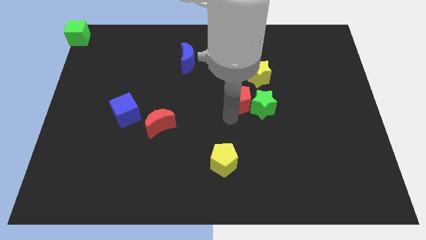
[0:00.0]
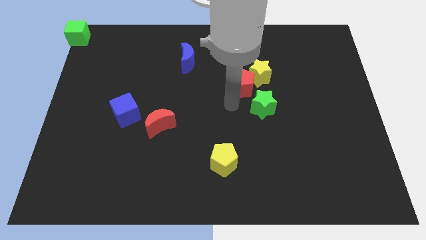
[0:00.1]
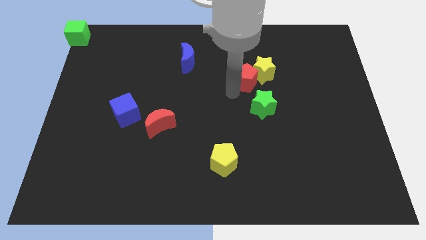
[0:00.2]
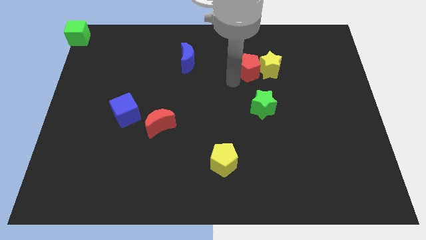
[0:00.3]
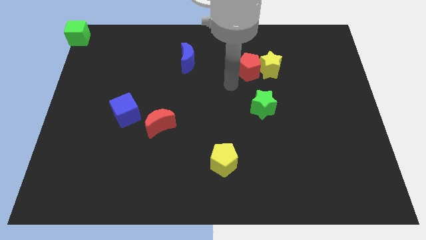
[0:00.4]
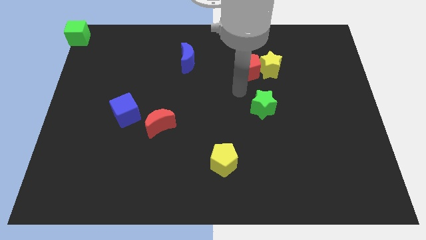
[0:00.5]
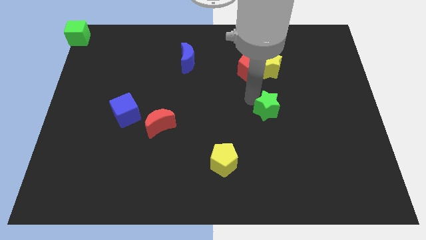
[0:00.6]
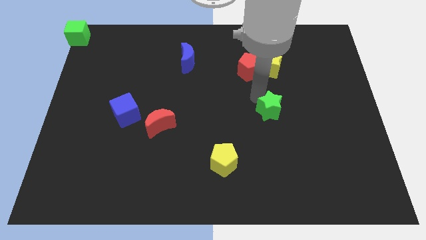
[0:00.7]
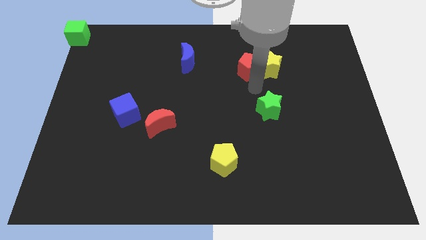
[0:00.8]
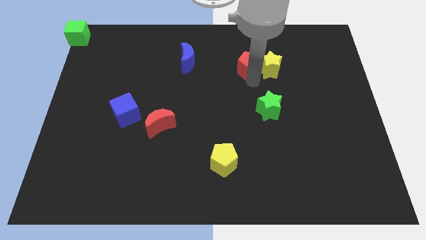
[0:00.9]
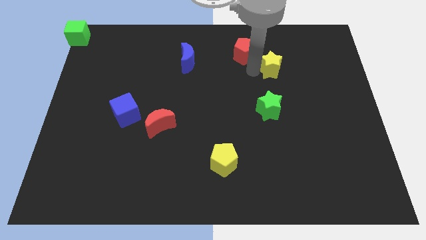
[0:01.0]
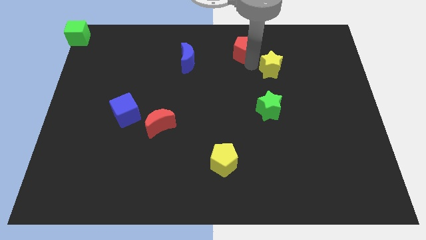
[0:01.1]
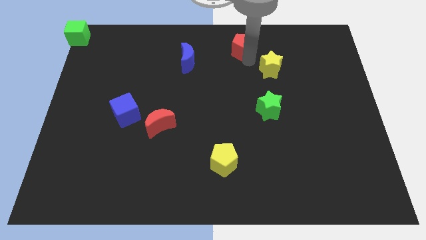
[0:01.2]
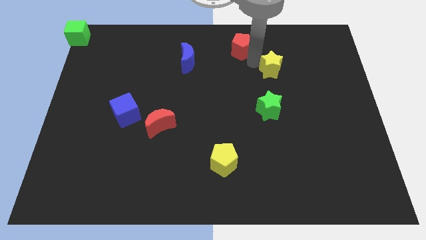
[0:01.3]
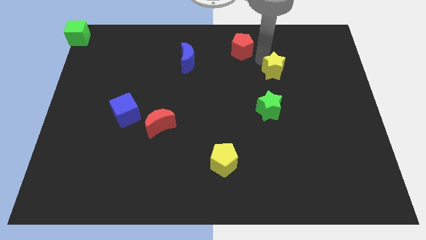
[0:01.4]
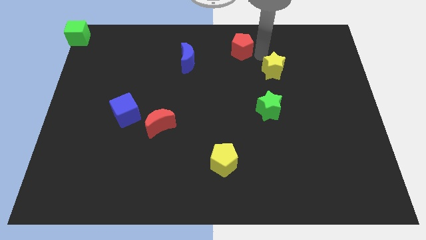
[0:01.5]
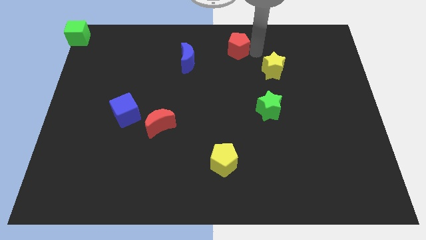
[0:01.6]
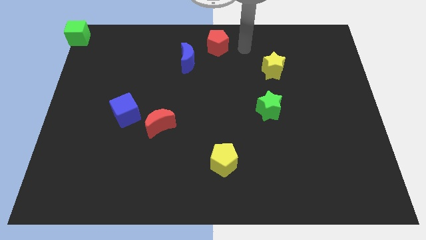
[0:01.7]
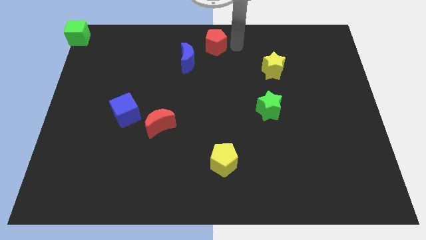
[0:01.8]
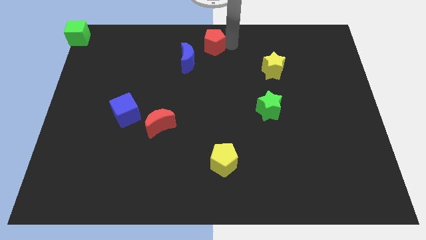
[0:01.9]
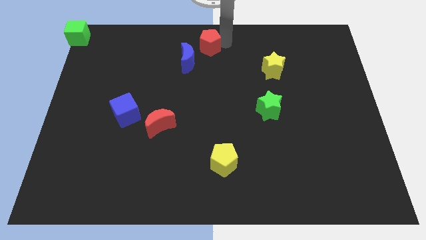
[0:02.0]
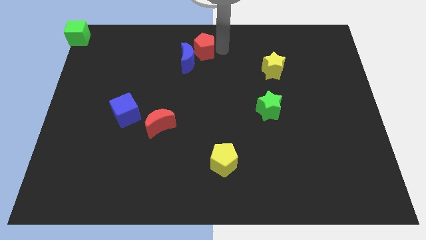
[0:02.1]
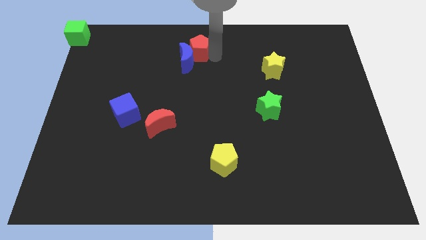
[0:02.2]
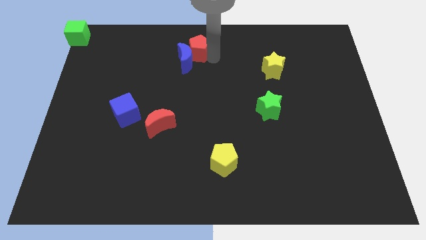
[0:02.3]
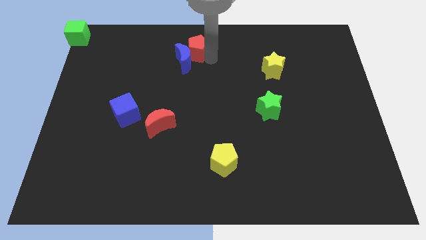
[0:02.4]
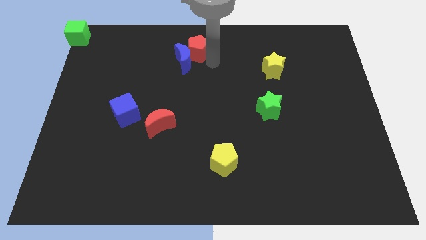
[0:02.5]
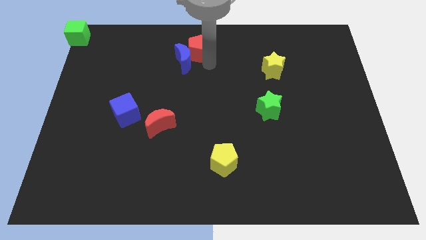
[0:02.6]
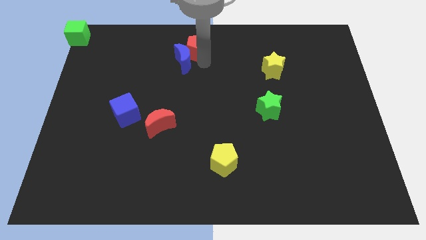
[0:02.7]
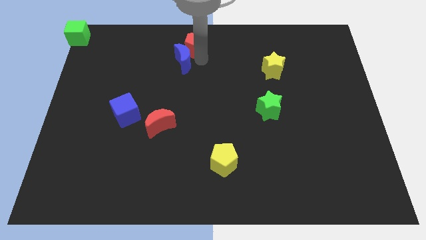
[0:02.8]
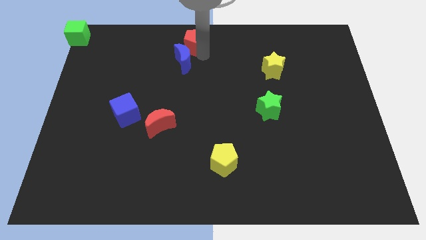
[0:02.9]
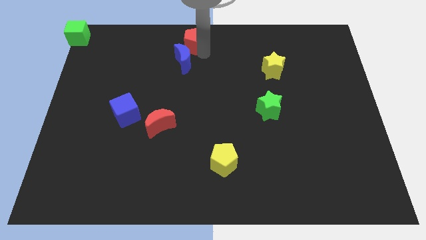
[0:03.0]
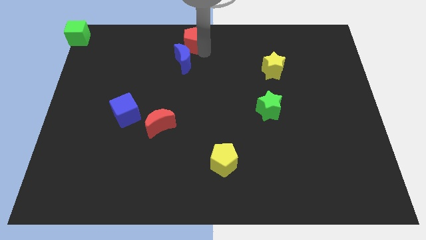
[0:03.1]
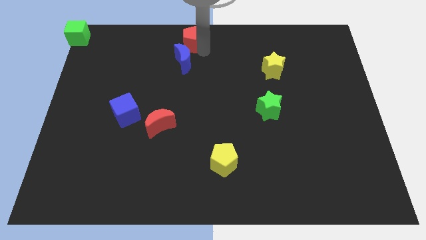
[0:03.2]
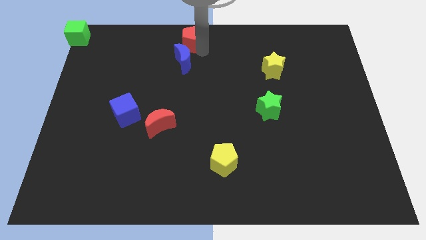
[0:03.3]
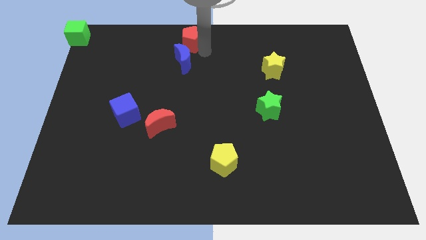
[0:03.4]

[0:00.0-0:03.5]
push red pentagon slightly above blue crescent

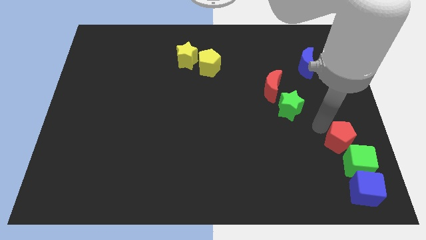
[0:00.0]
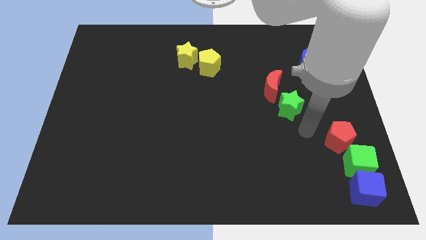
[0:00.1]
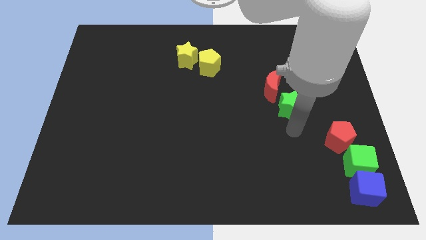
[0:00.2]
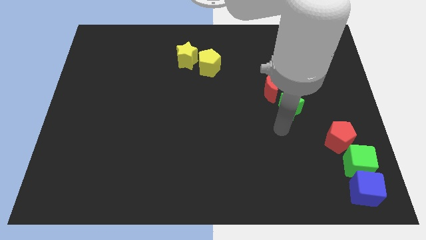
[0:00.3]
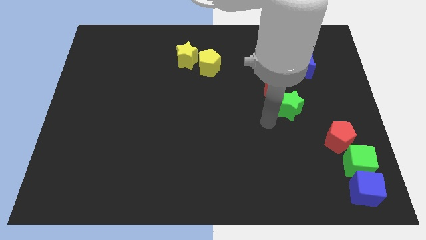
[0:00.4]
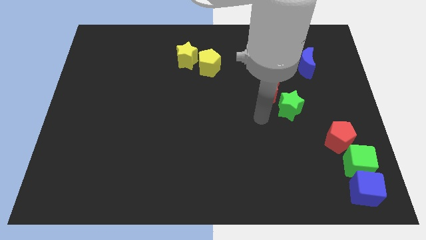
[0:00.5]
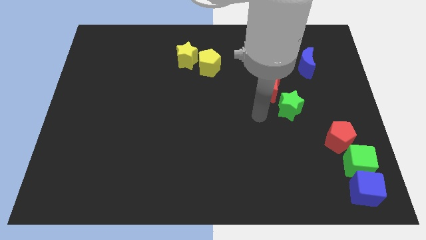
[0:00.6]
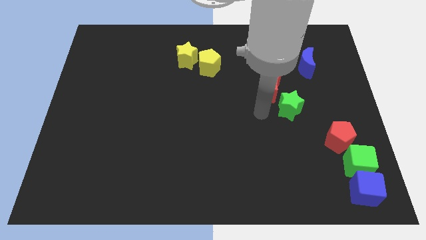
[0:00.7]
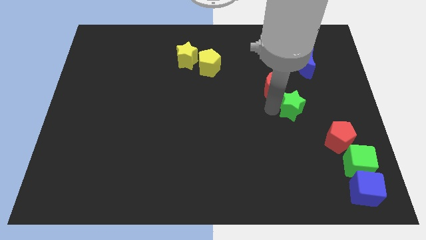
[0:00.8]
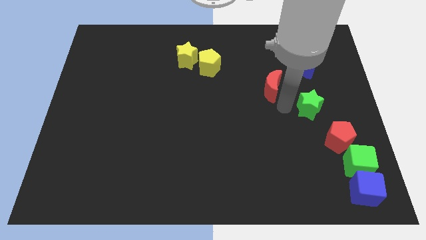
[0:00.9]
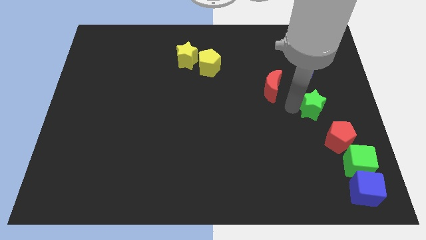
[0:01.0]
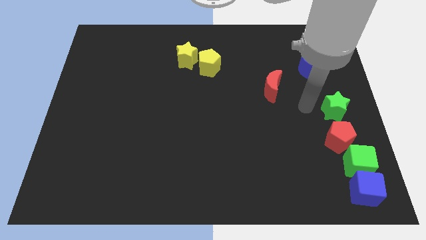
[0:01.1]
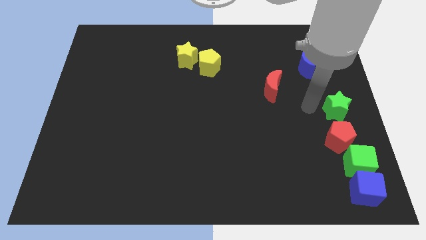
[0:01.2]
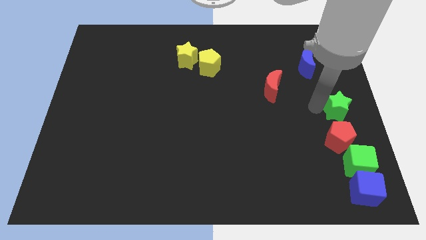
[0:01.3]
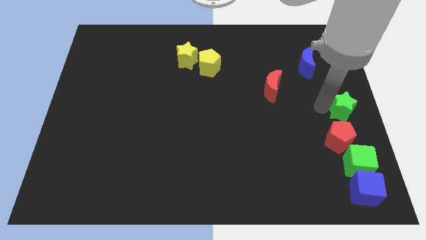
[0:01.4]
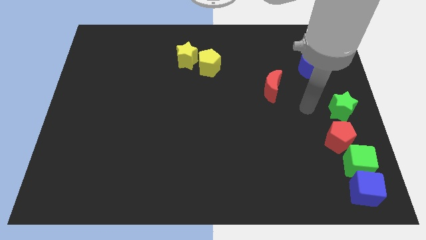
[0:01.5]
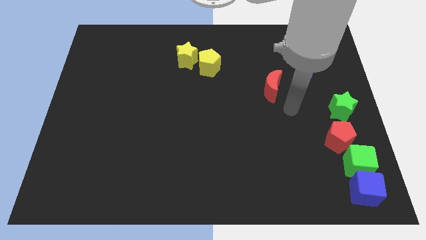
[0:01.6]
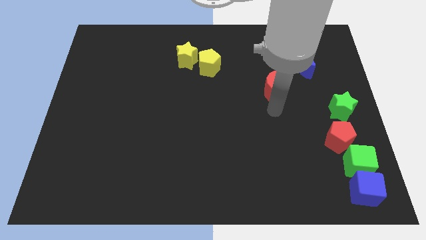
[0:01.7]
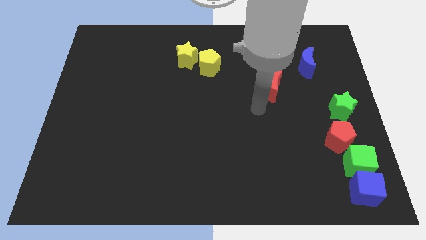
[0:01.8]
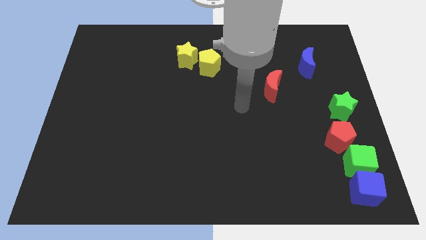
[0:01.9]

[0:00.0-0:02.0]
place the green star above the red pentagon

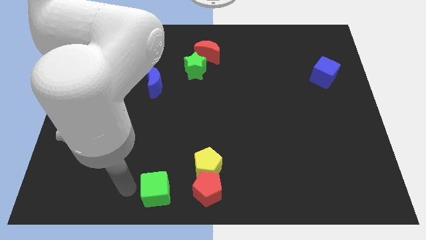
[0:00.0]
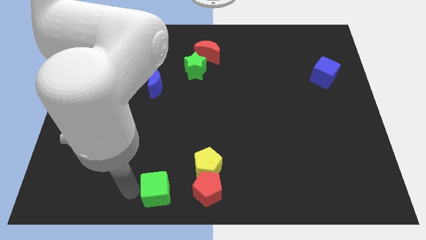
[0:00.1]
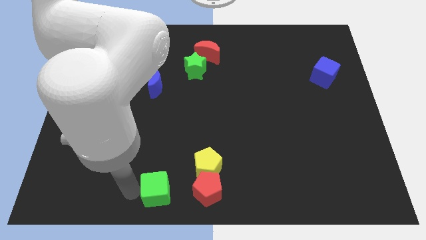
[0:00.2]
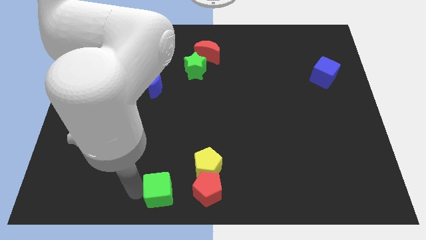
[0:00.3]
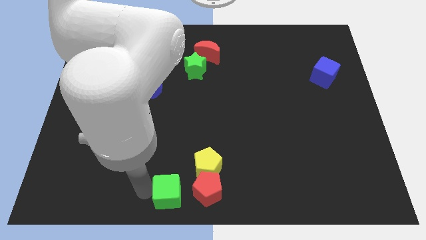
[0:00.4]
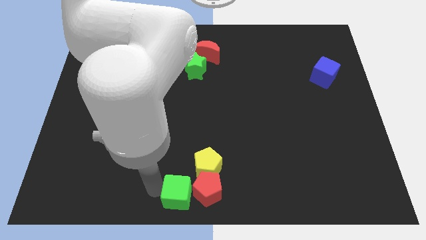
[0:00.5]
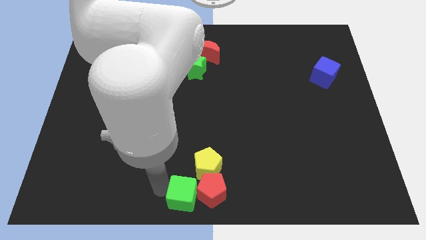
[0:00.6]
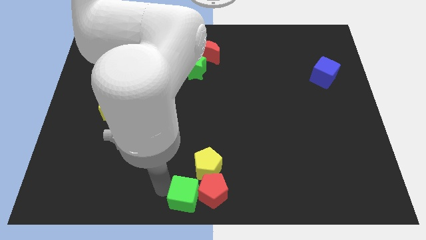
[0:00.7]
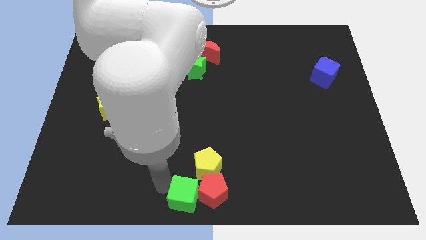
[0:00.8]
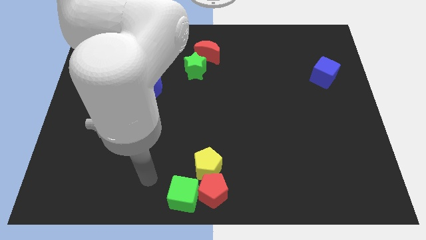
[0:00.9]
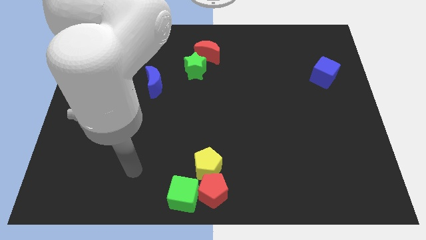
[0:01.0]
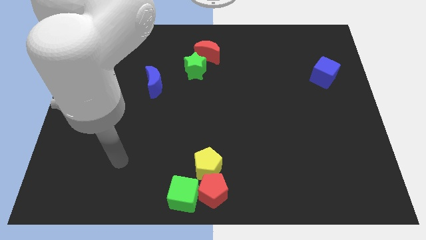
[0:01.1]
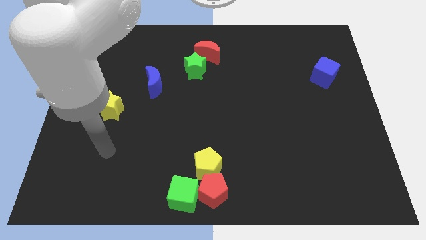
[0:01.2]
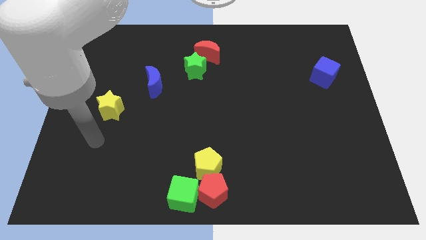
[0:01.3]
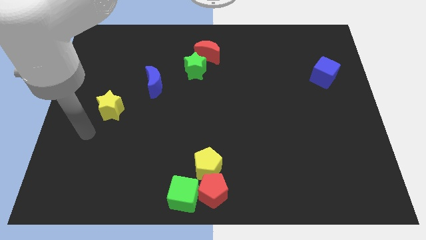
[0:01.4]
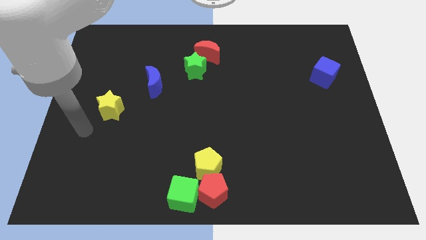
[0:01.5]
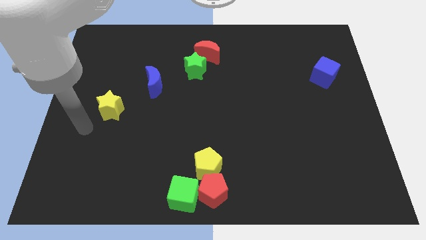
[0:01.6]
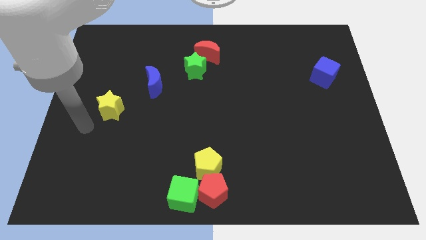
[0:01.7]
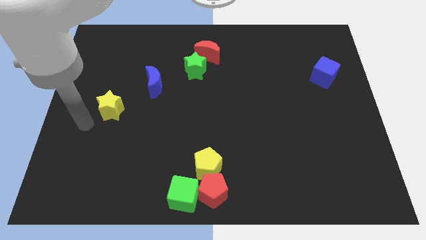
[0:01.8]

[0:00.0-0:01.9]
put the green cube into the red pentagon

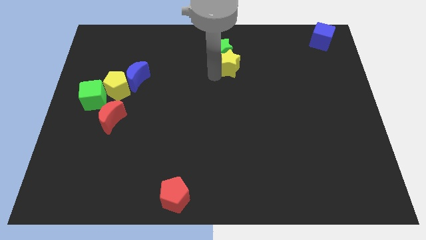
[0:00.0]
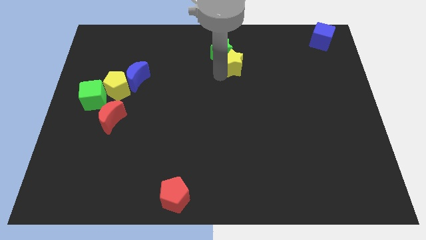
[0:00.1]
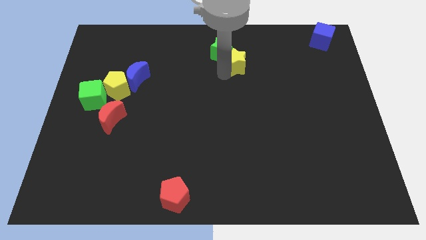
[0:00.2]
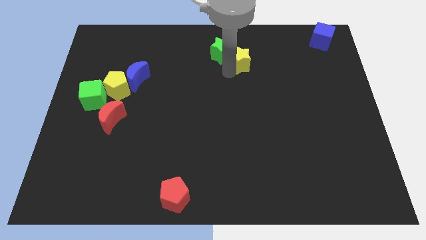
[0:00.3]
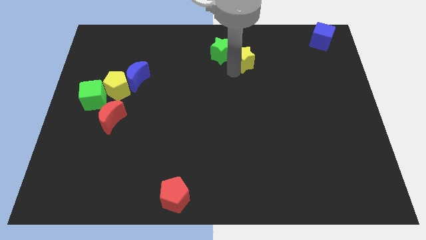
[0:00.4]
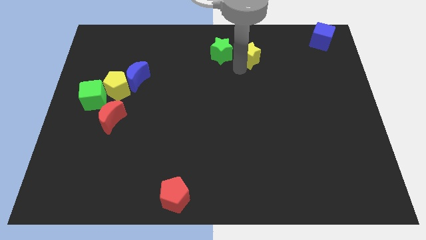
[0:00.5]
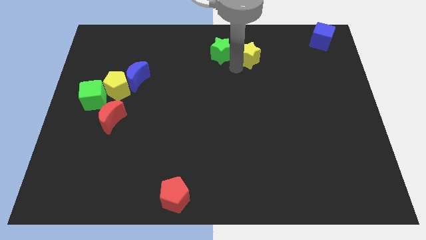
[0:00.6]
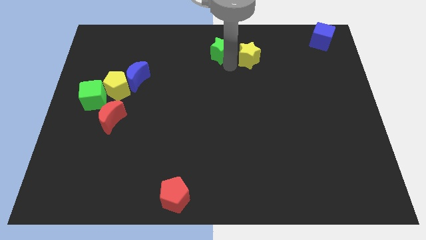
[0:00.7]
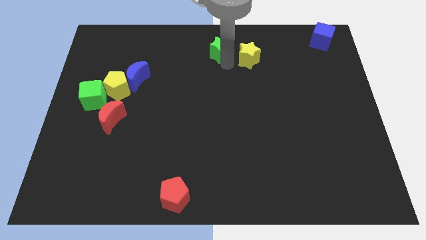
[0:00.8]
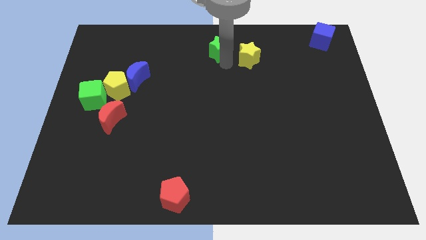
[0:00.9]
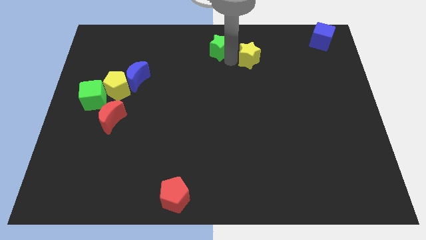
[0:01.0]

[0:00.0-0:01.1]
separate green star and yellow star

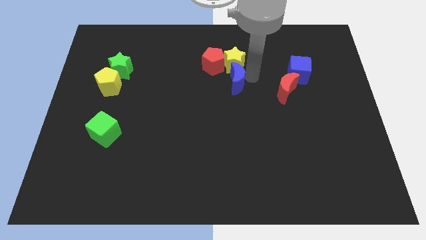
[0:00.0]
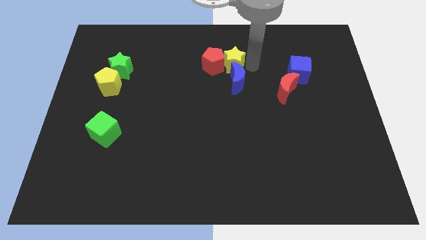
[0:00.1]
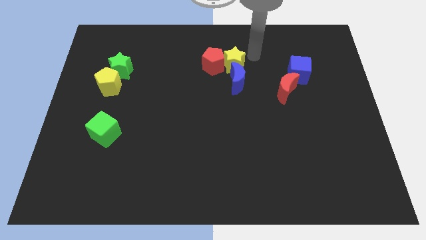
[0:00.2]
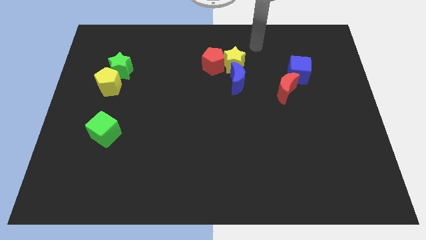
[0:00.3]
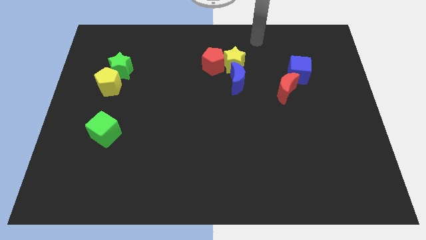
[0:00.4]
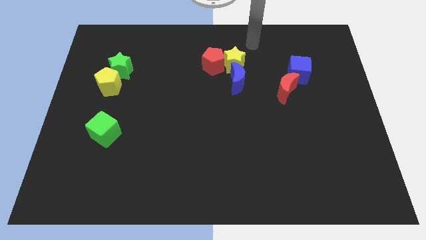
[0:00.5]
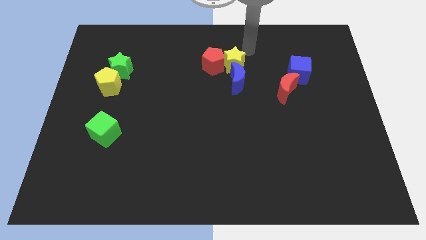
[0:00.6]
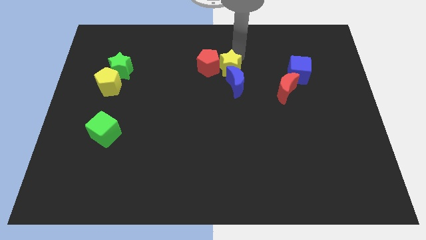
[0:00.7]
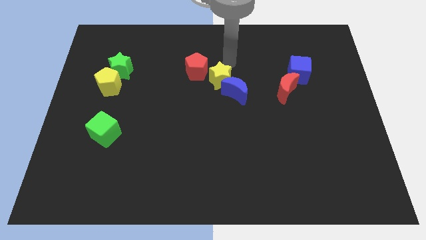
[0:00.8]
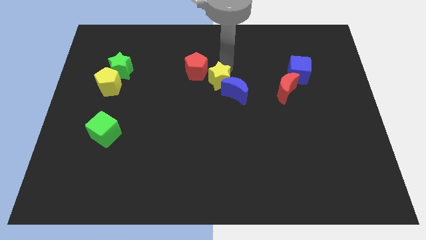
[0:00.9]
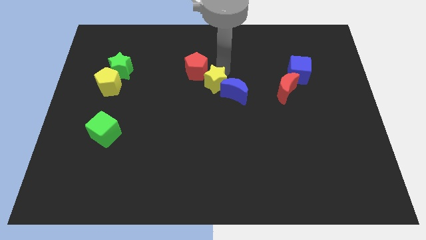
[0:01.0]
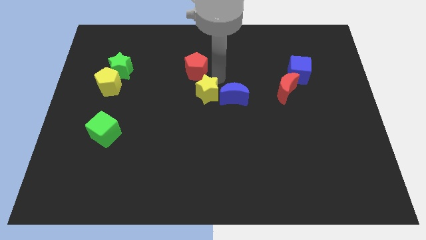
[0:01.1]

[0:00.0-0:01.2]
place yellow star beside blue crescent
